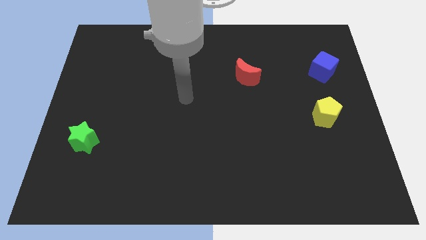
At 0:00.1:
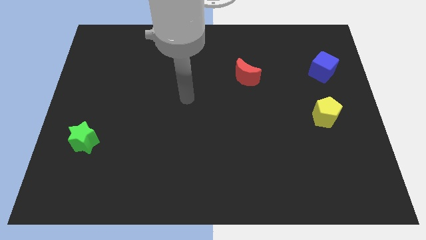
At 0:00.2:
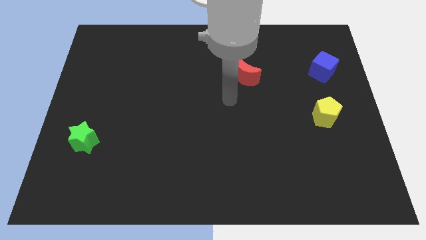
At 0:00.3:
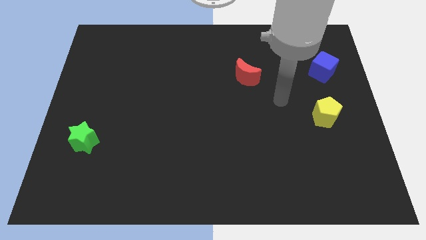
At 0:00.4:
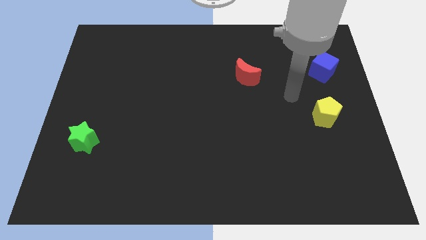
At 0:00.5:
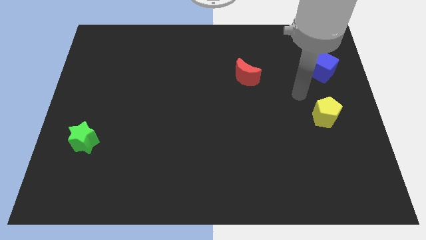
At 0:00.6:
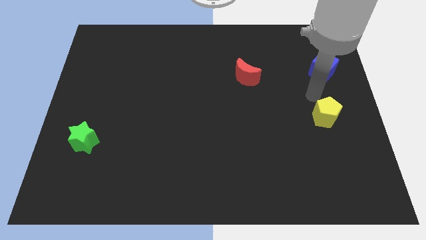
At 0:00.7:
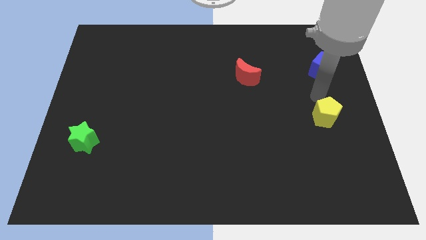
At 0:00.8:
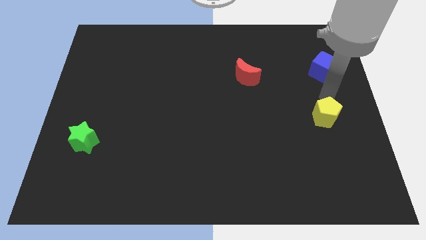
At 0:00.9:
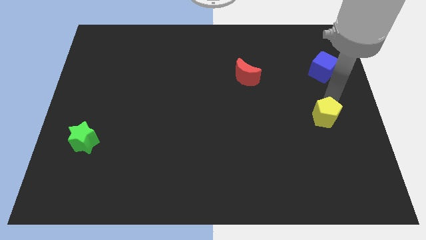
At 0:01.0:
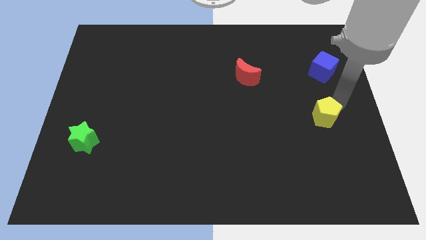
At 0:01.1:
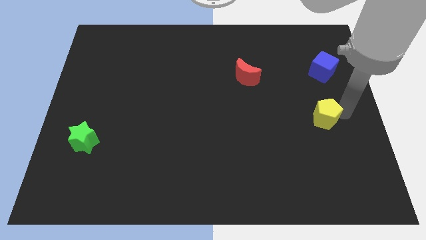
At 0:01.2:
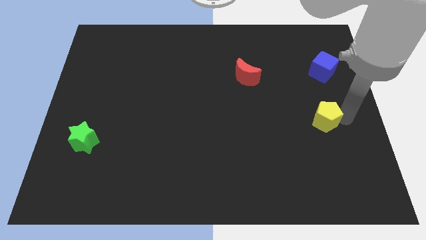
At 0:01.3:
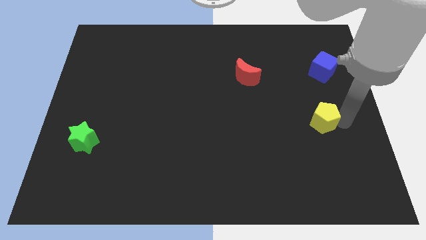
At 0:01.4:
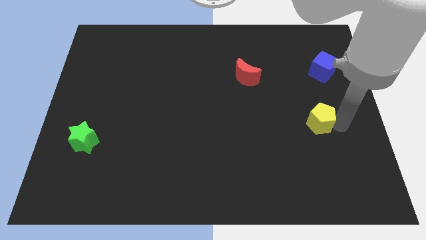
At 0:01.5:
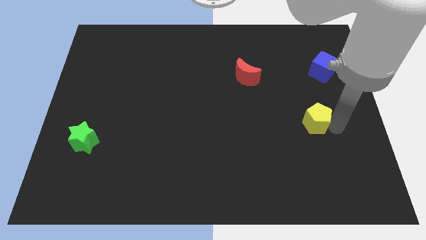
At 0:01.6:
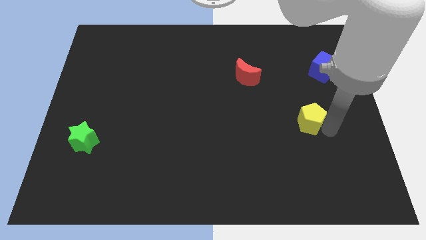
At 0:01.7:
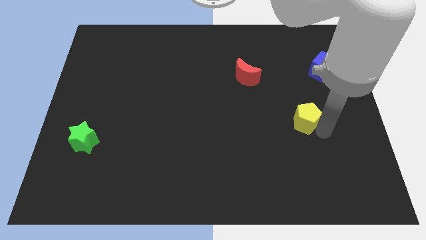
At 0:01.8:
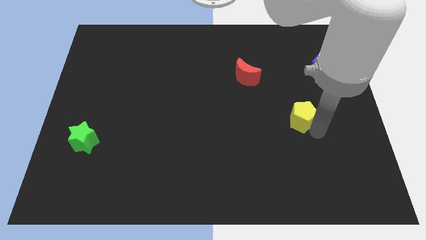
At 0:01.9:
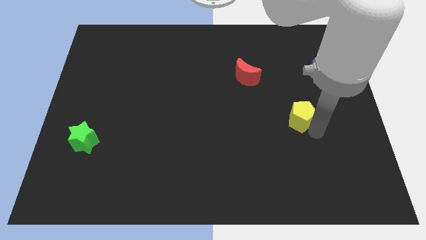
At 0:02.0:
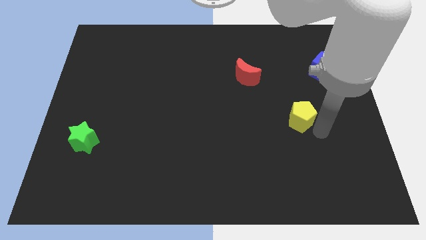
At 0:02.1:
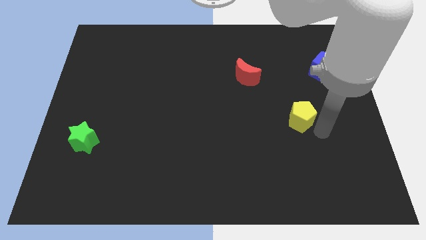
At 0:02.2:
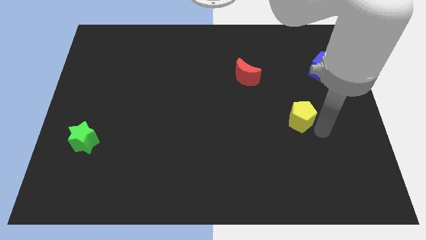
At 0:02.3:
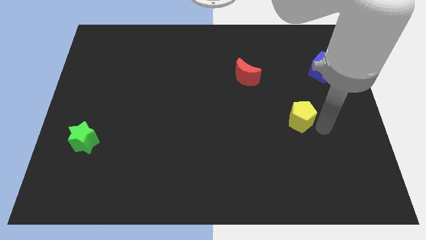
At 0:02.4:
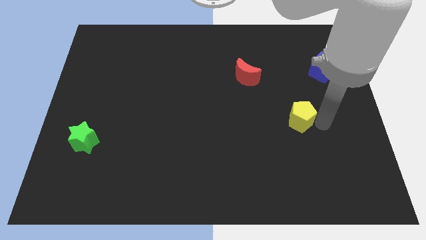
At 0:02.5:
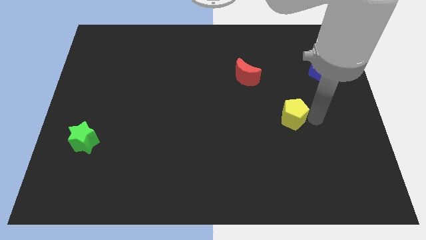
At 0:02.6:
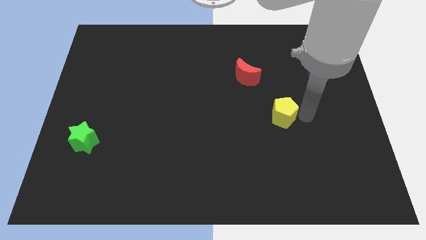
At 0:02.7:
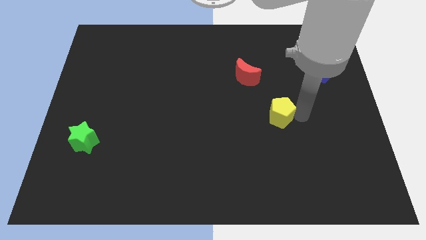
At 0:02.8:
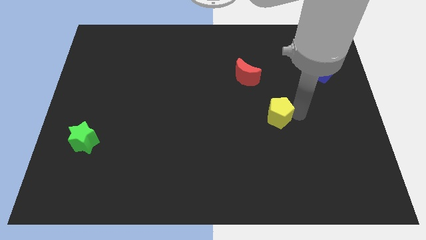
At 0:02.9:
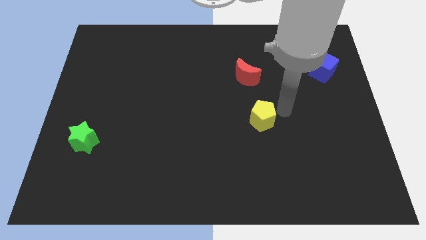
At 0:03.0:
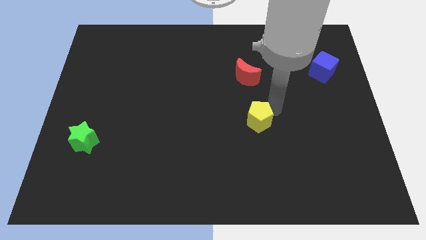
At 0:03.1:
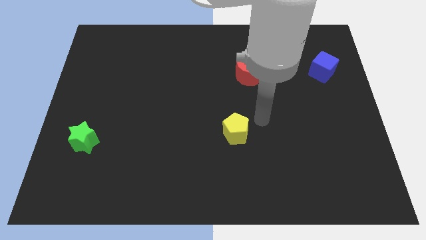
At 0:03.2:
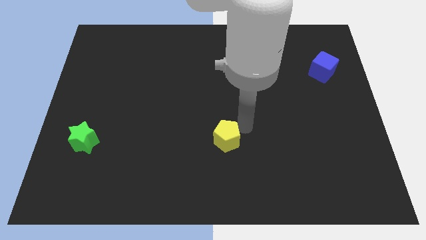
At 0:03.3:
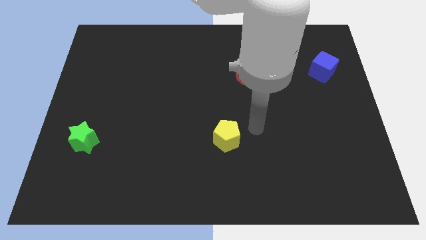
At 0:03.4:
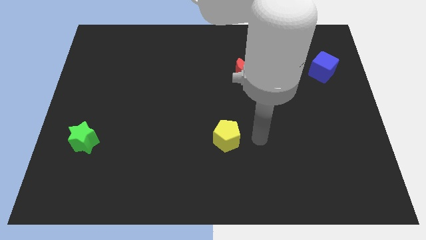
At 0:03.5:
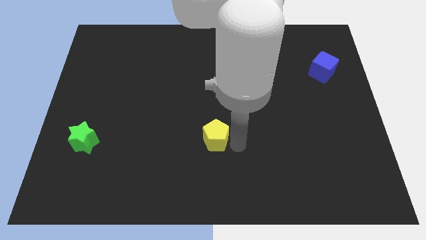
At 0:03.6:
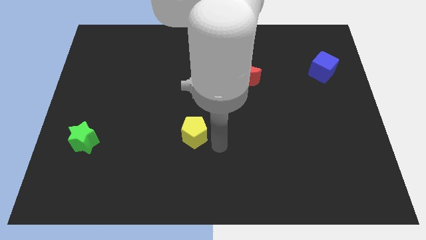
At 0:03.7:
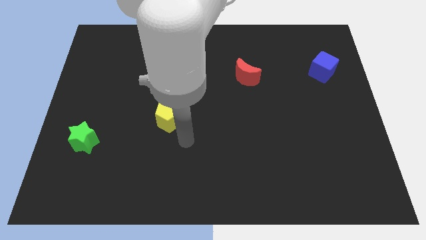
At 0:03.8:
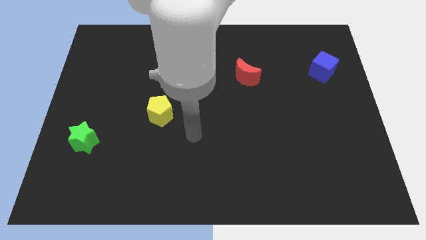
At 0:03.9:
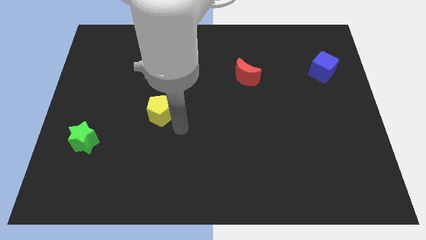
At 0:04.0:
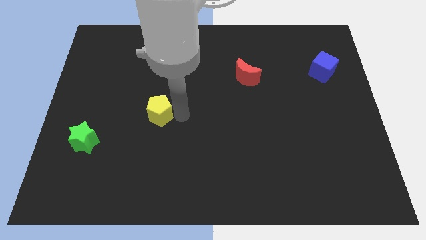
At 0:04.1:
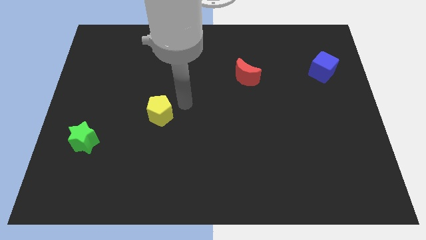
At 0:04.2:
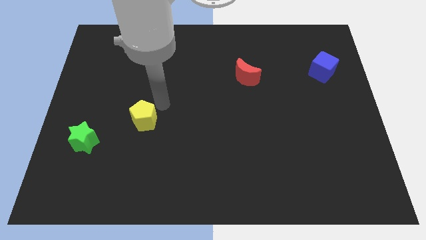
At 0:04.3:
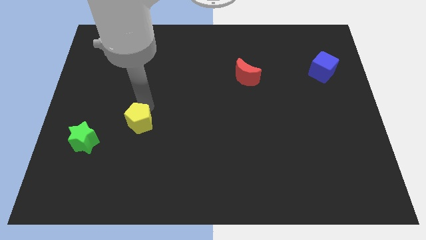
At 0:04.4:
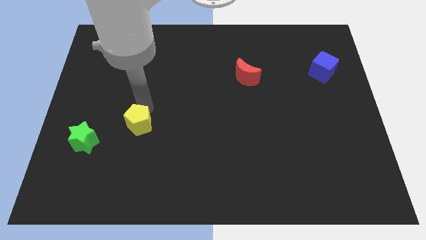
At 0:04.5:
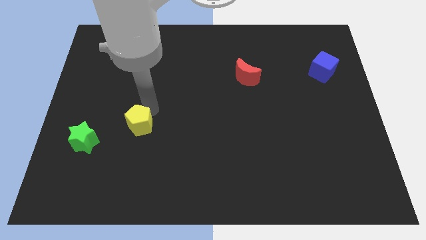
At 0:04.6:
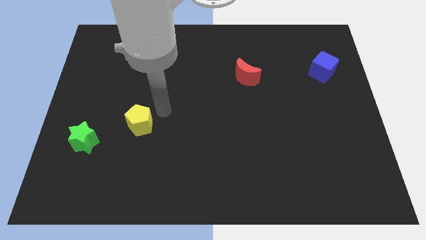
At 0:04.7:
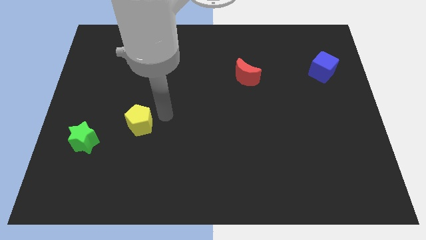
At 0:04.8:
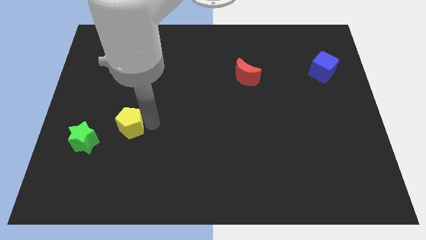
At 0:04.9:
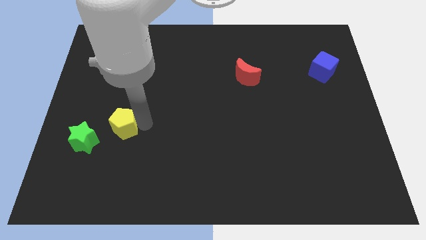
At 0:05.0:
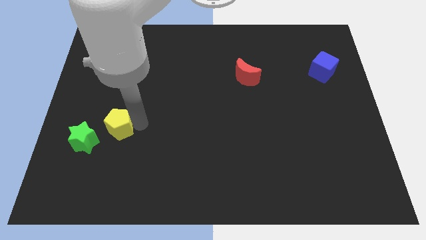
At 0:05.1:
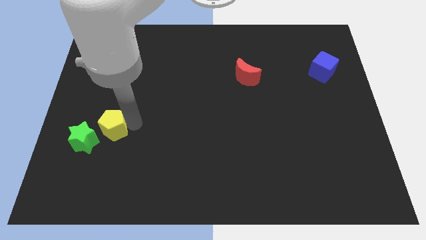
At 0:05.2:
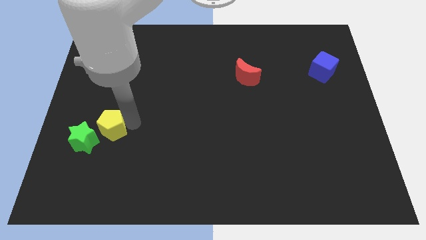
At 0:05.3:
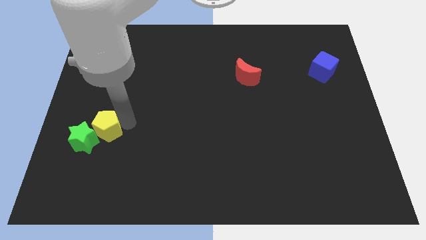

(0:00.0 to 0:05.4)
slide the pentagon to the green star

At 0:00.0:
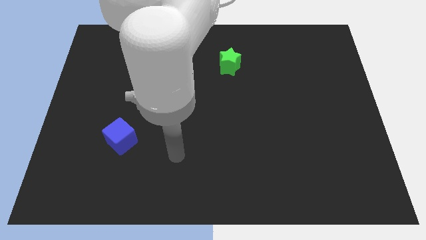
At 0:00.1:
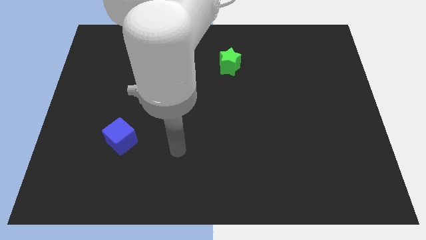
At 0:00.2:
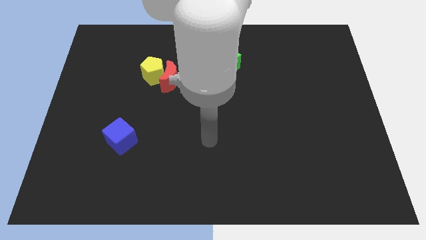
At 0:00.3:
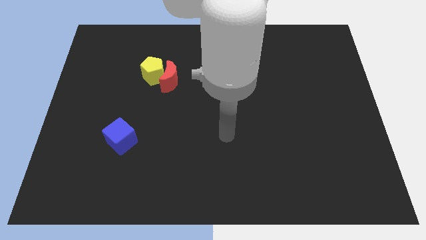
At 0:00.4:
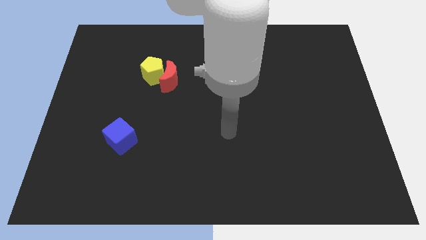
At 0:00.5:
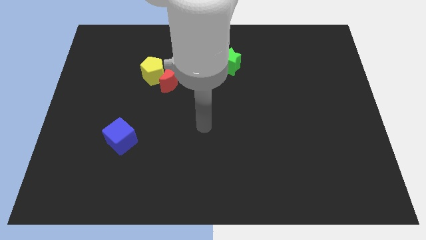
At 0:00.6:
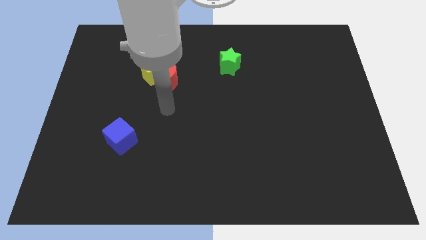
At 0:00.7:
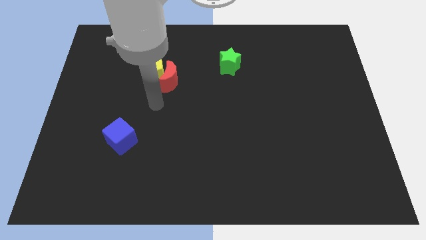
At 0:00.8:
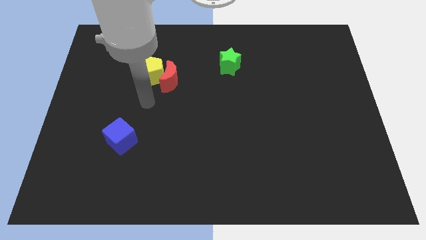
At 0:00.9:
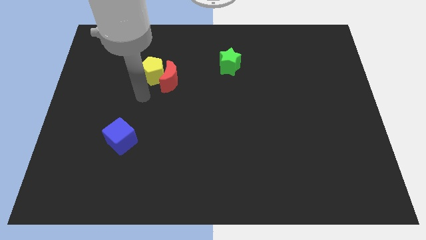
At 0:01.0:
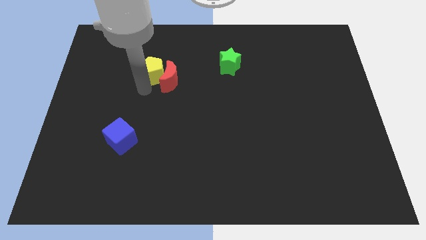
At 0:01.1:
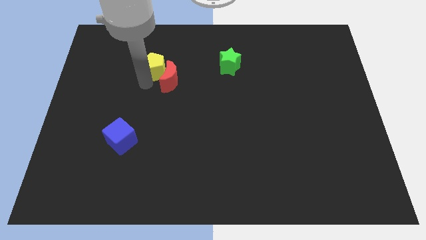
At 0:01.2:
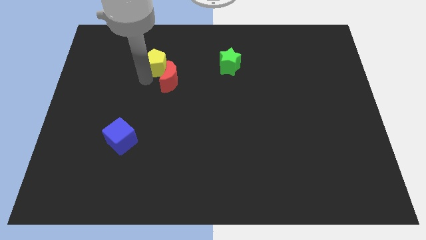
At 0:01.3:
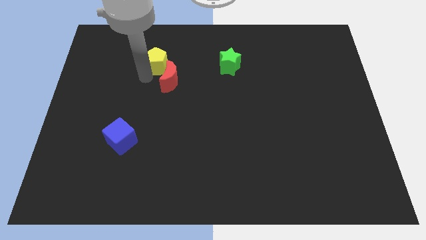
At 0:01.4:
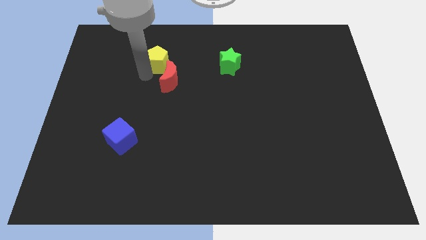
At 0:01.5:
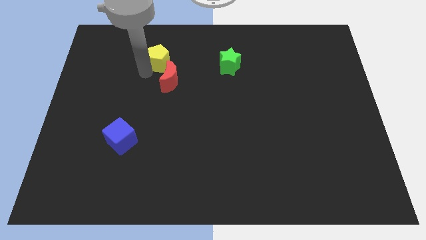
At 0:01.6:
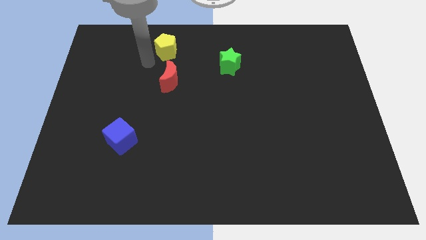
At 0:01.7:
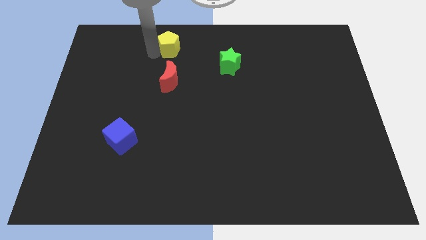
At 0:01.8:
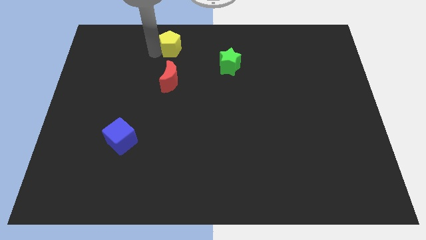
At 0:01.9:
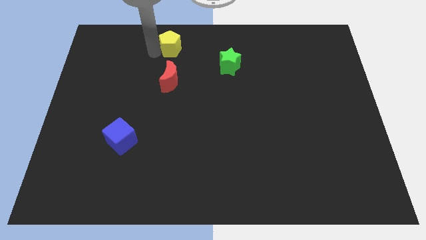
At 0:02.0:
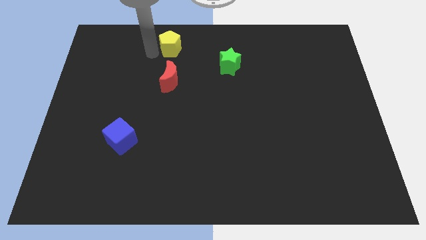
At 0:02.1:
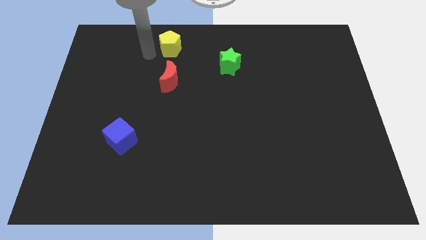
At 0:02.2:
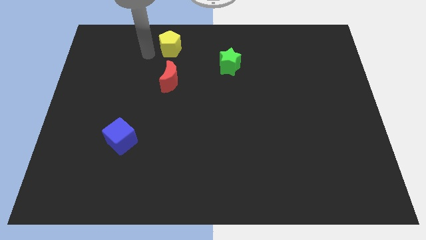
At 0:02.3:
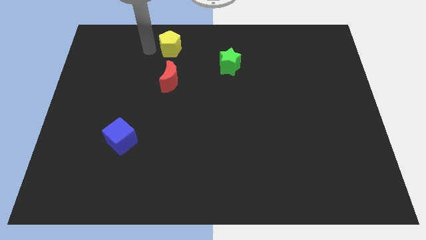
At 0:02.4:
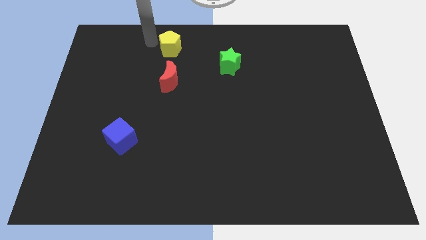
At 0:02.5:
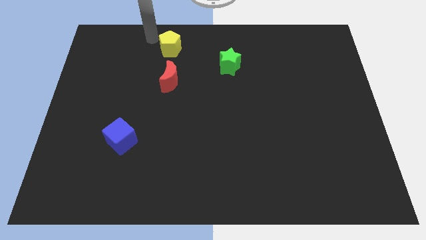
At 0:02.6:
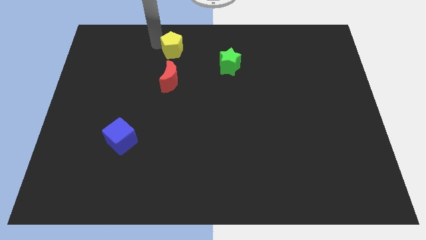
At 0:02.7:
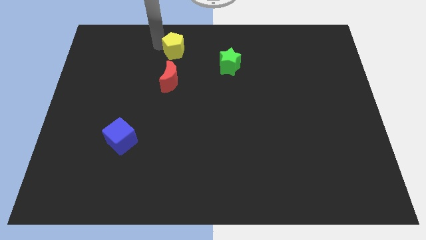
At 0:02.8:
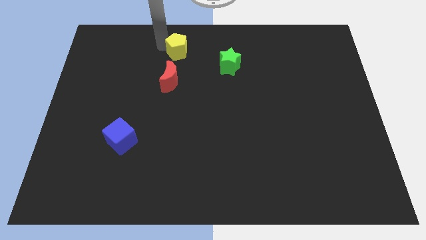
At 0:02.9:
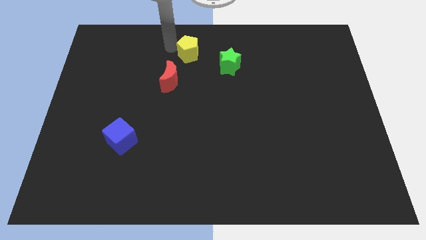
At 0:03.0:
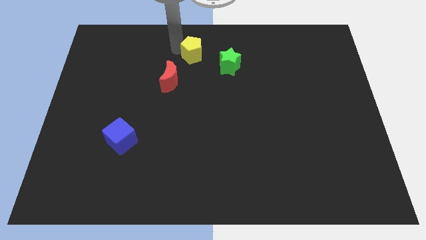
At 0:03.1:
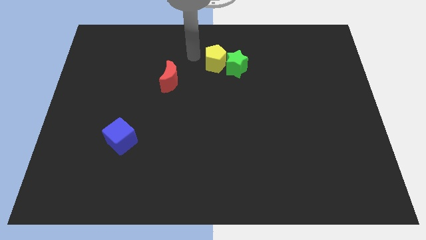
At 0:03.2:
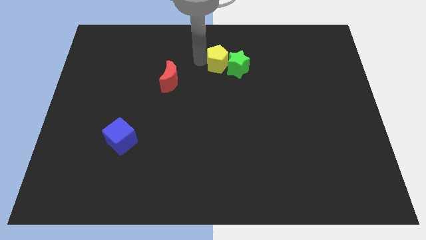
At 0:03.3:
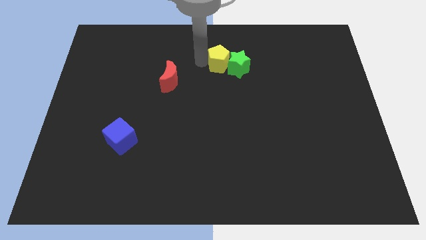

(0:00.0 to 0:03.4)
push the pentagon next to the green star
